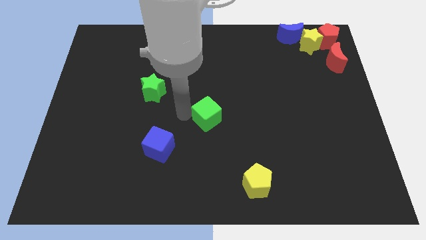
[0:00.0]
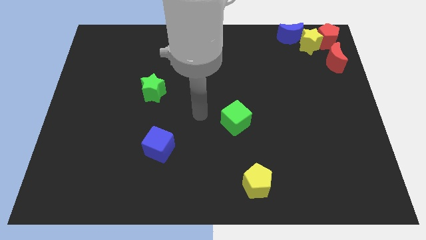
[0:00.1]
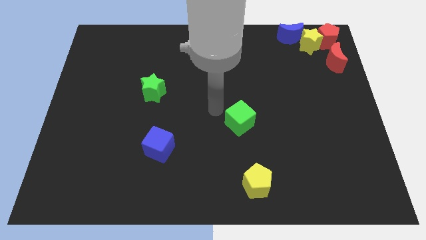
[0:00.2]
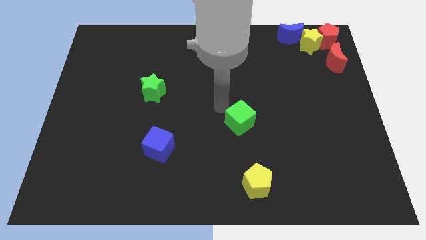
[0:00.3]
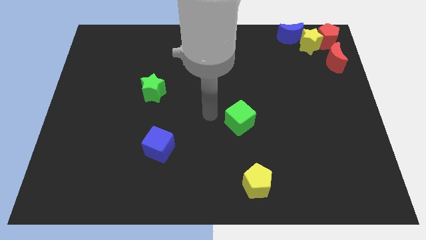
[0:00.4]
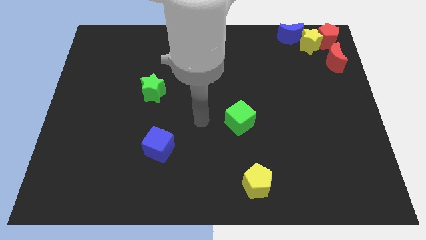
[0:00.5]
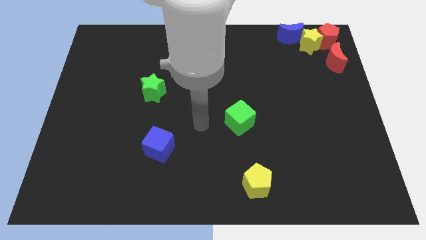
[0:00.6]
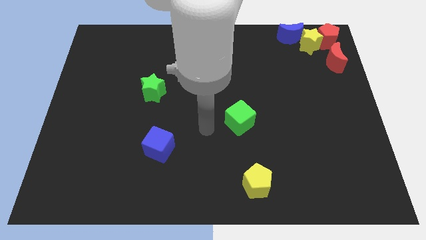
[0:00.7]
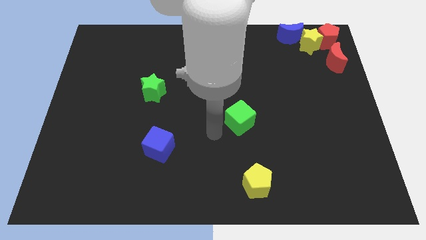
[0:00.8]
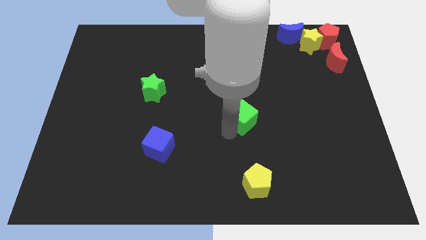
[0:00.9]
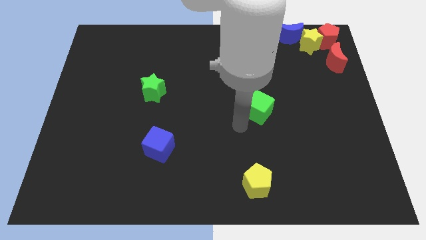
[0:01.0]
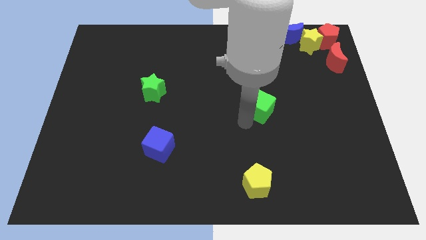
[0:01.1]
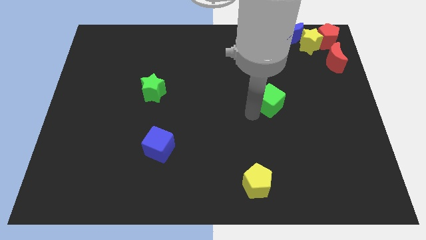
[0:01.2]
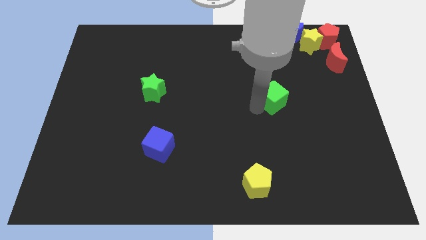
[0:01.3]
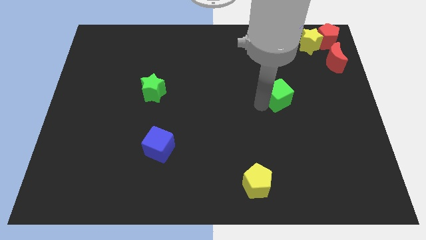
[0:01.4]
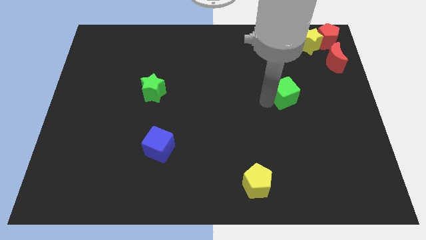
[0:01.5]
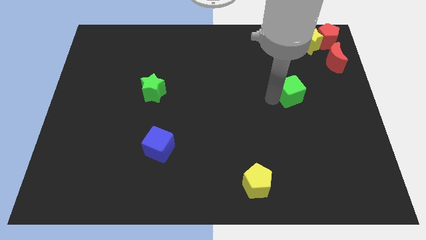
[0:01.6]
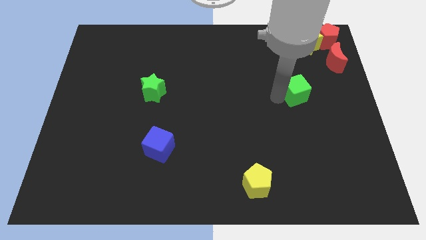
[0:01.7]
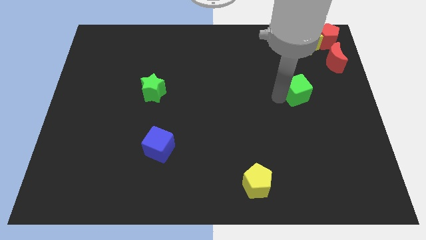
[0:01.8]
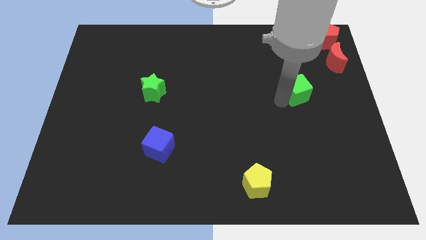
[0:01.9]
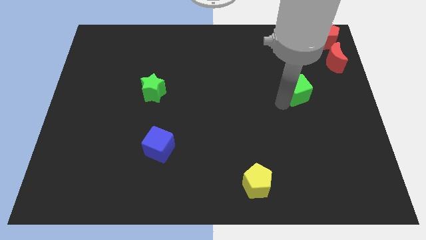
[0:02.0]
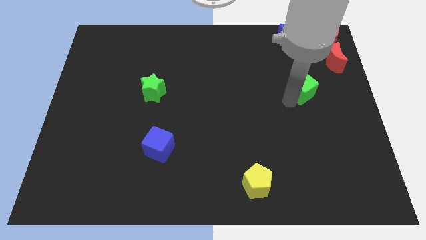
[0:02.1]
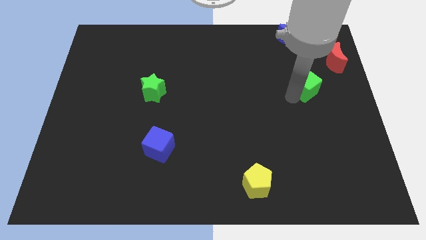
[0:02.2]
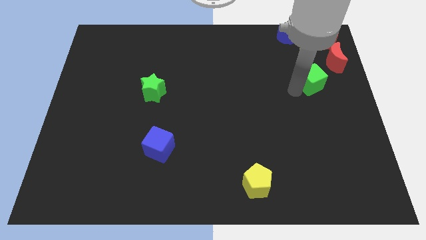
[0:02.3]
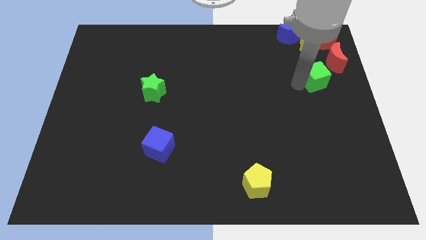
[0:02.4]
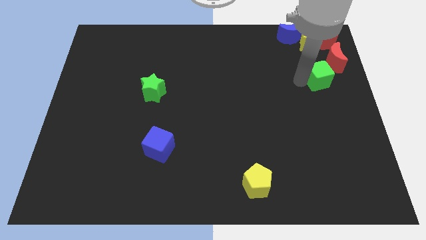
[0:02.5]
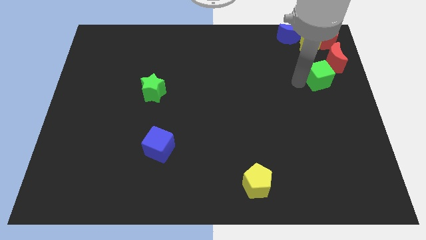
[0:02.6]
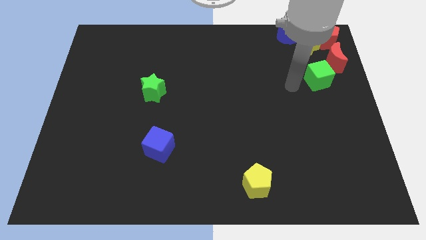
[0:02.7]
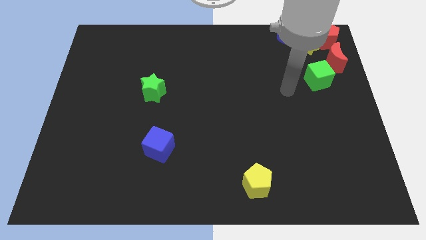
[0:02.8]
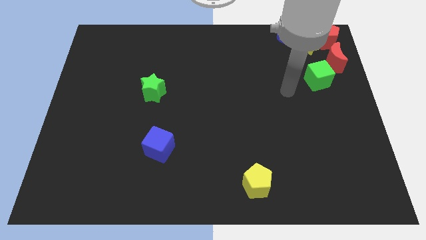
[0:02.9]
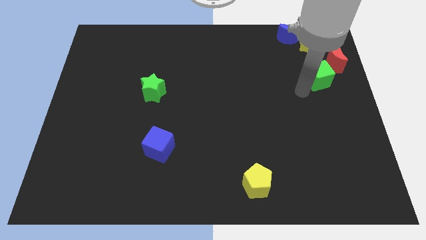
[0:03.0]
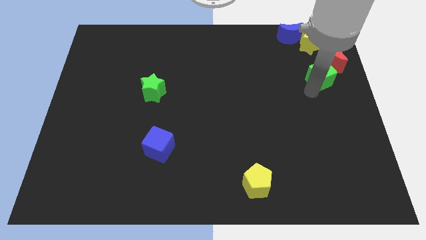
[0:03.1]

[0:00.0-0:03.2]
place green cube below yellow star

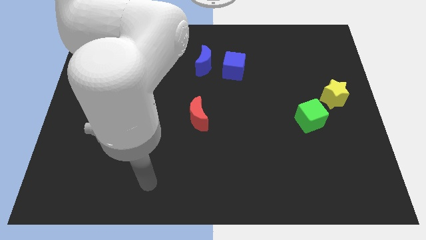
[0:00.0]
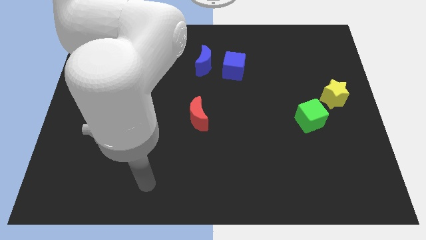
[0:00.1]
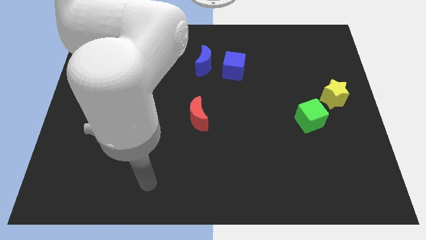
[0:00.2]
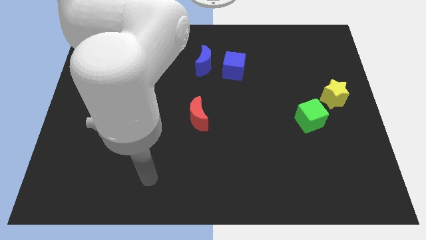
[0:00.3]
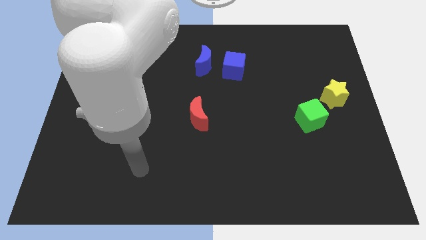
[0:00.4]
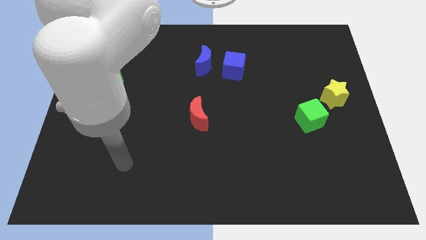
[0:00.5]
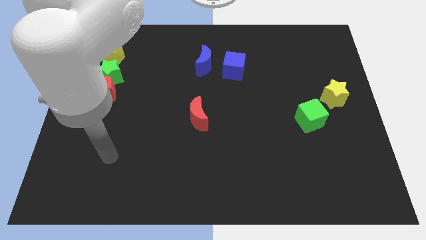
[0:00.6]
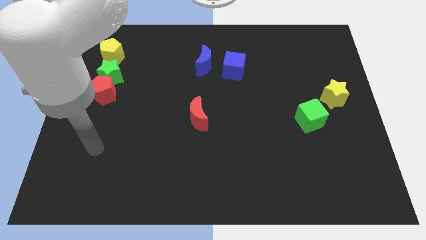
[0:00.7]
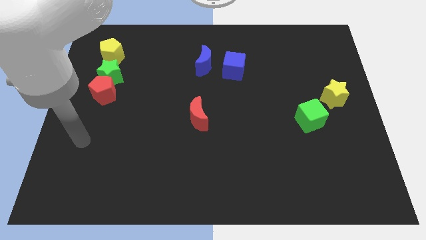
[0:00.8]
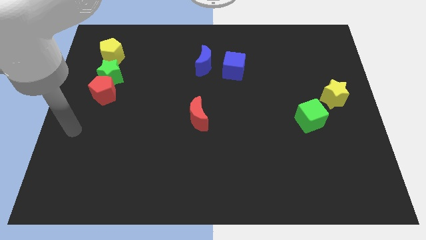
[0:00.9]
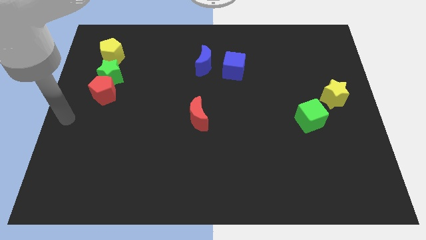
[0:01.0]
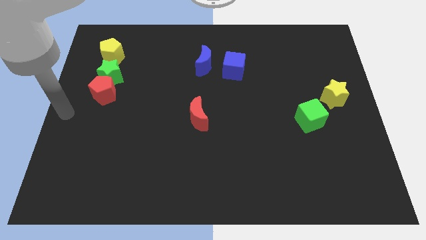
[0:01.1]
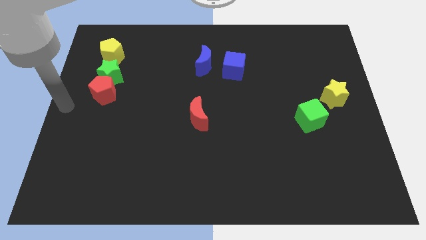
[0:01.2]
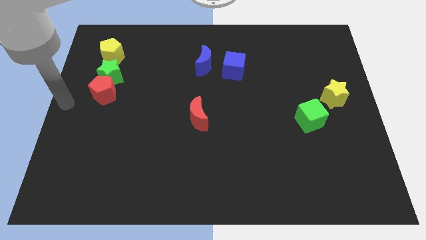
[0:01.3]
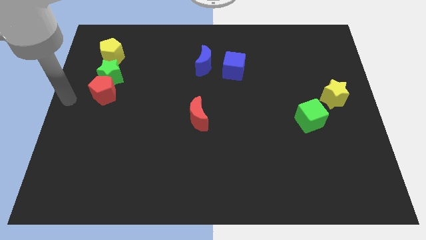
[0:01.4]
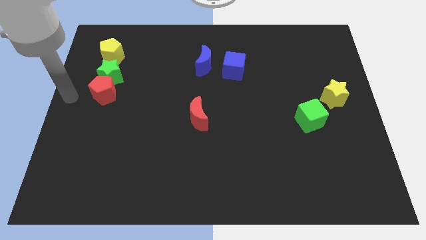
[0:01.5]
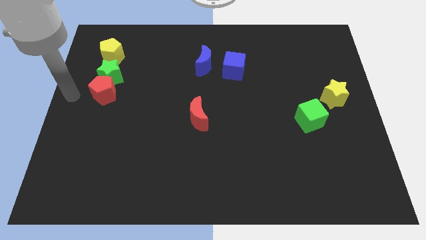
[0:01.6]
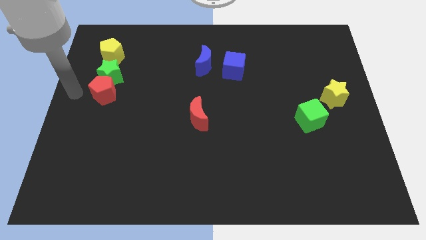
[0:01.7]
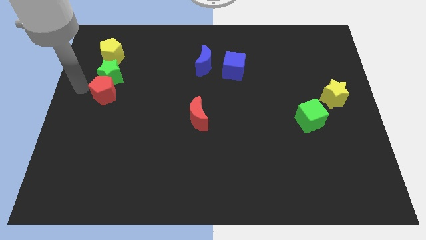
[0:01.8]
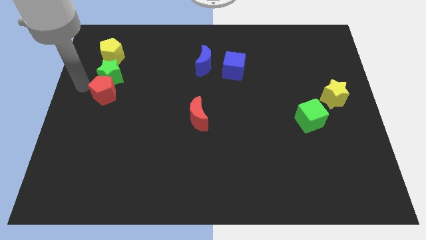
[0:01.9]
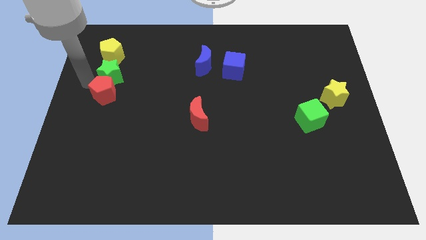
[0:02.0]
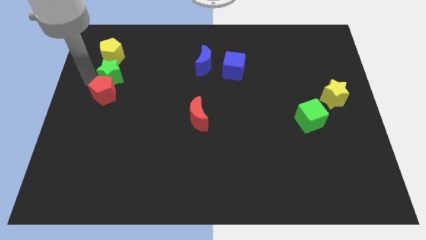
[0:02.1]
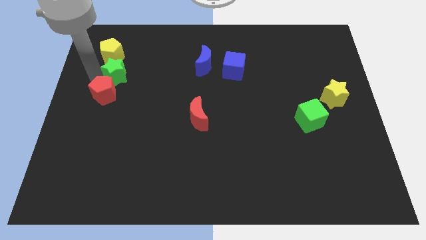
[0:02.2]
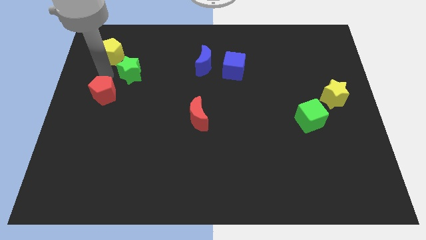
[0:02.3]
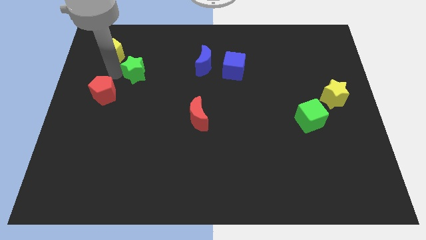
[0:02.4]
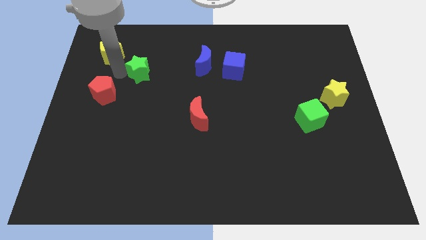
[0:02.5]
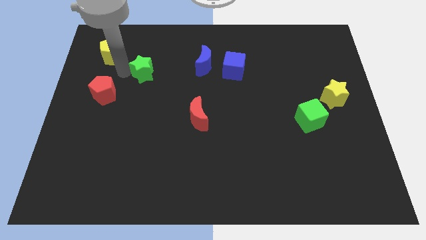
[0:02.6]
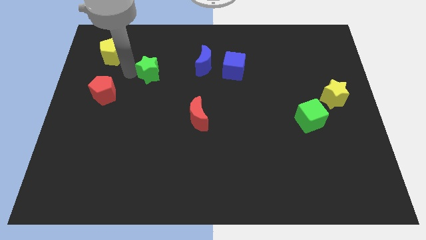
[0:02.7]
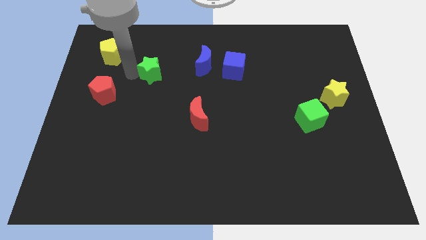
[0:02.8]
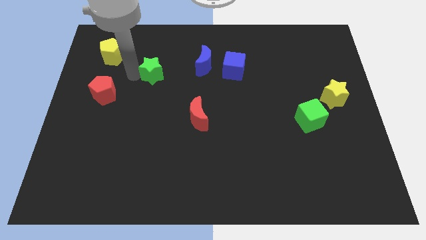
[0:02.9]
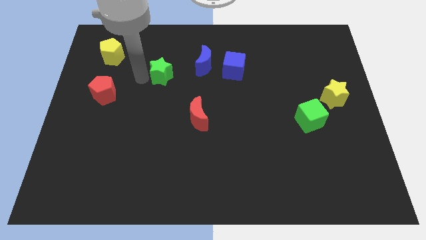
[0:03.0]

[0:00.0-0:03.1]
move the green star towards the left side of the blue crescent

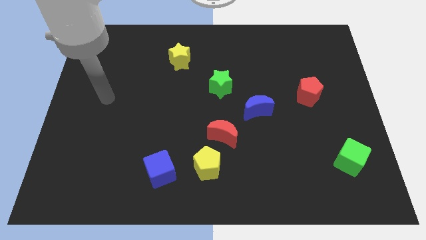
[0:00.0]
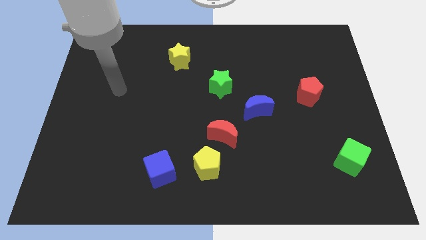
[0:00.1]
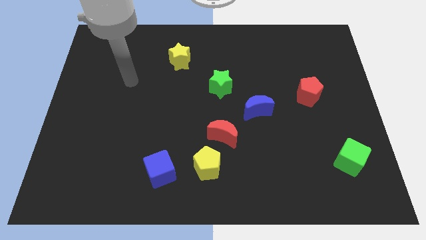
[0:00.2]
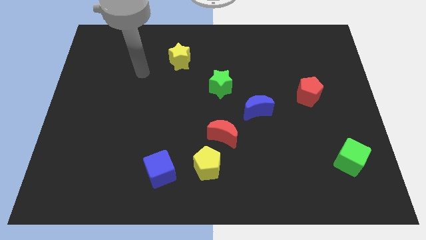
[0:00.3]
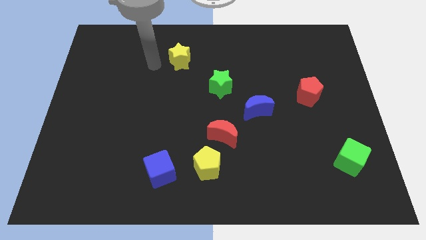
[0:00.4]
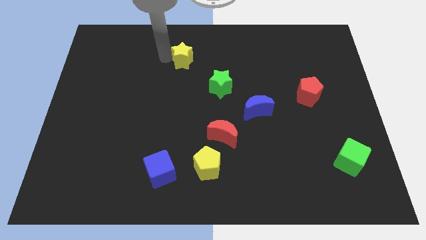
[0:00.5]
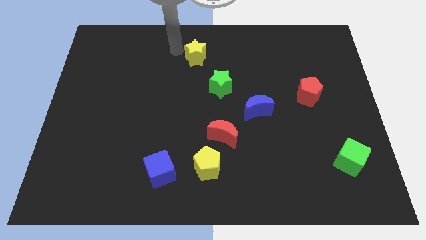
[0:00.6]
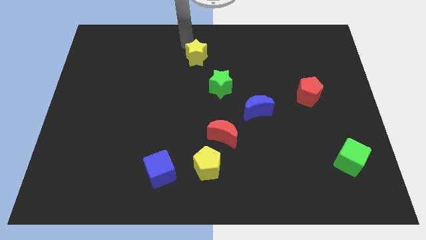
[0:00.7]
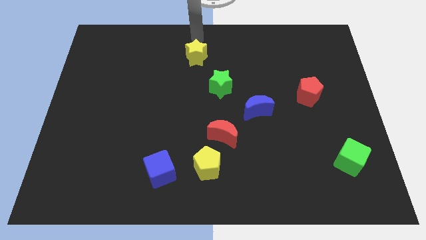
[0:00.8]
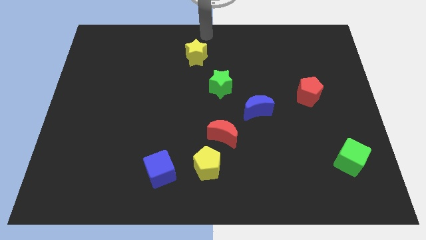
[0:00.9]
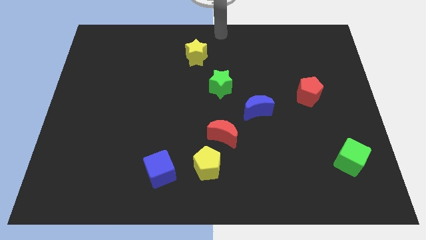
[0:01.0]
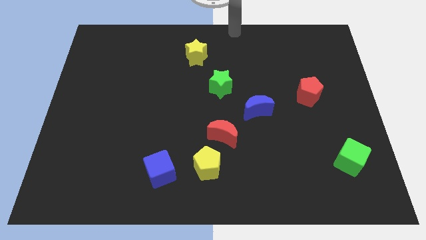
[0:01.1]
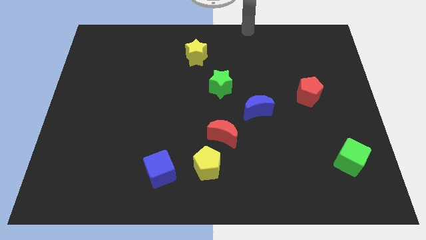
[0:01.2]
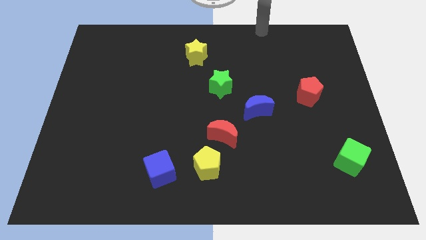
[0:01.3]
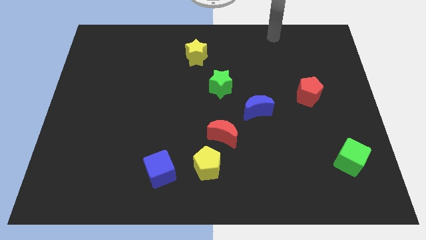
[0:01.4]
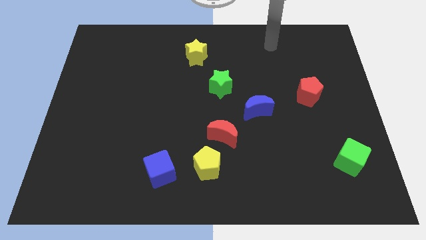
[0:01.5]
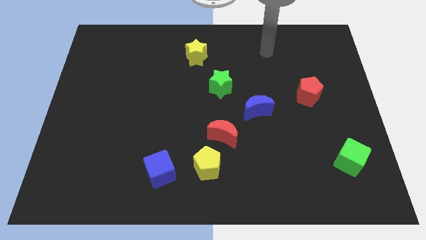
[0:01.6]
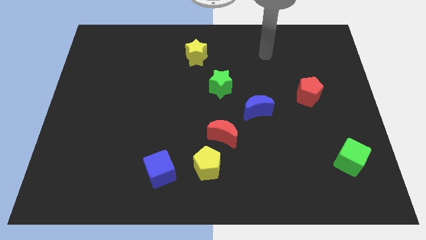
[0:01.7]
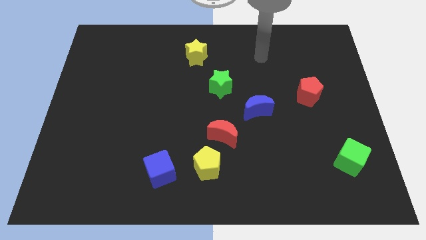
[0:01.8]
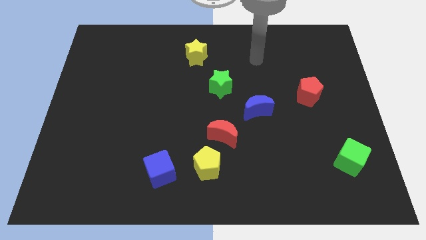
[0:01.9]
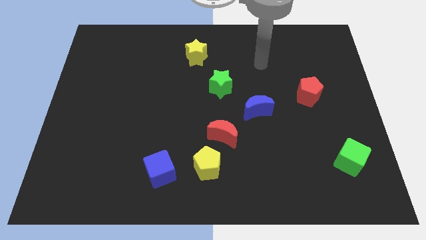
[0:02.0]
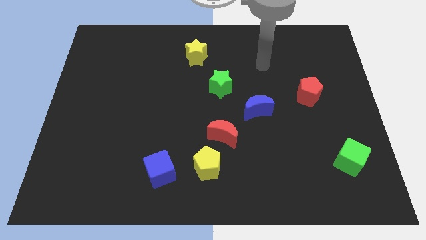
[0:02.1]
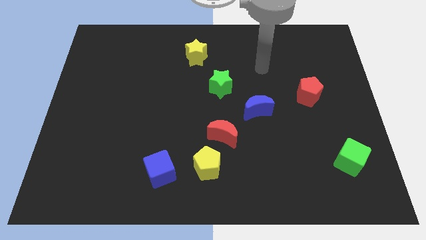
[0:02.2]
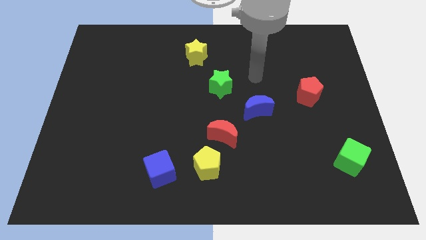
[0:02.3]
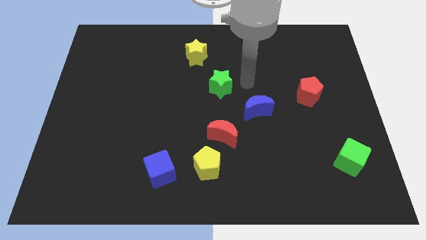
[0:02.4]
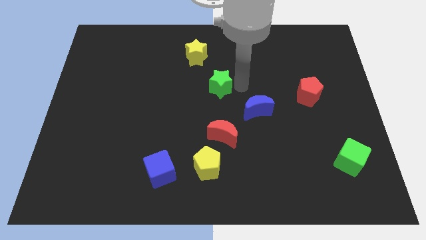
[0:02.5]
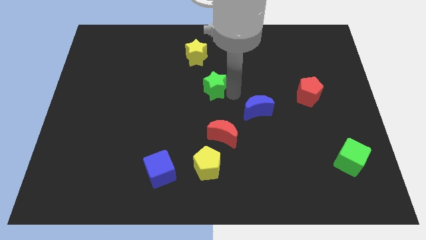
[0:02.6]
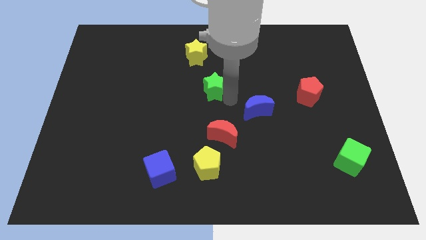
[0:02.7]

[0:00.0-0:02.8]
slightly move the green star towards right
